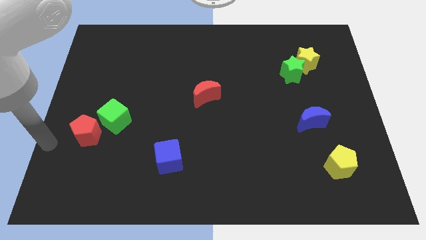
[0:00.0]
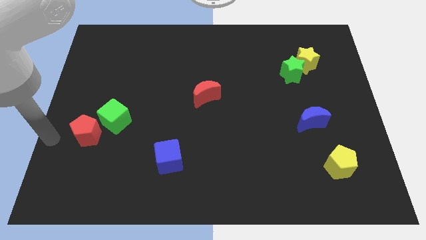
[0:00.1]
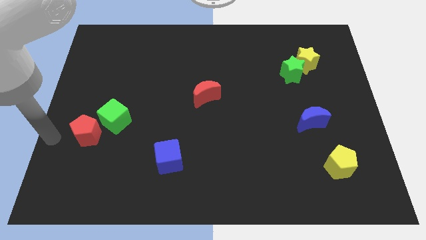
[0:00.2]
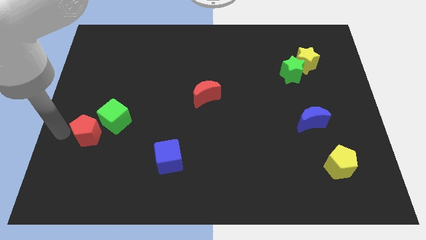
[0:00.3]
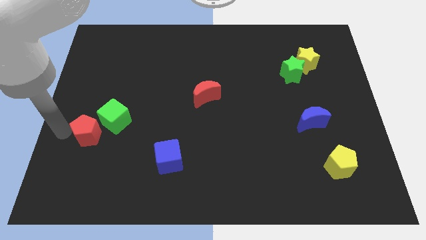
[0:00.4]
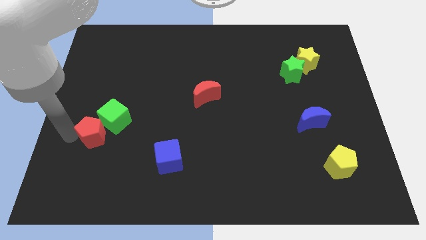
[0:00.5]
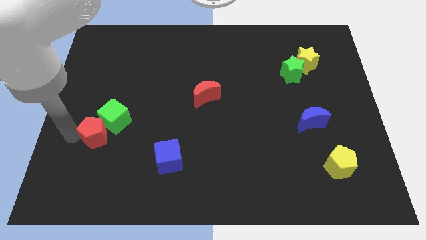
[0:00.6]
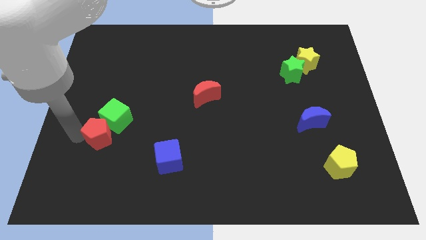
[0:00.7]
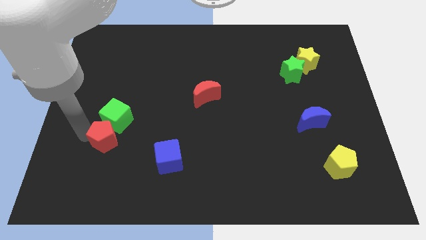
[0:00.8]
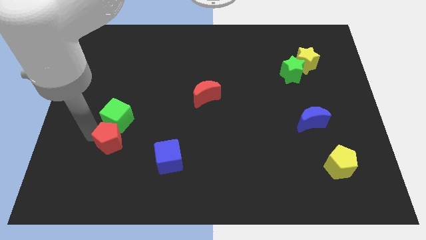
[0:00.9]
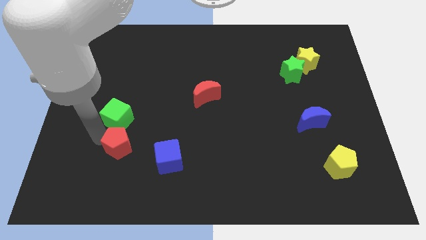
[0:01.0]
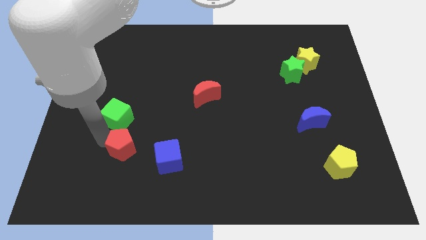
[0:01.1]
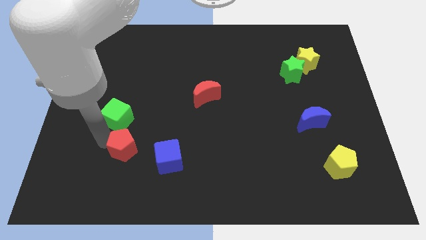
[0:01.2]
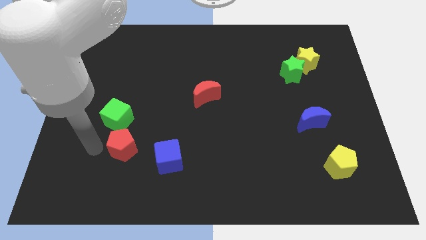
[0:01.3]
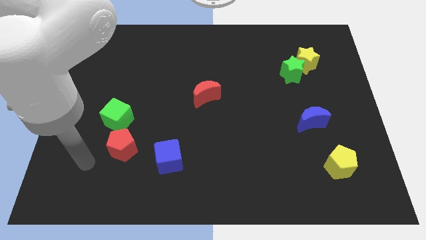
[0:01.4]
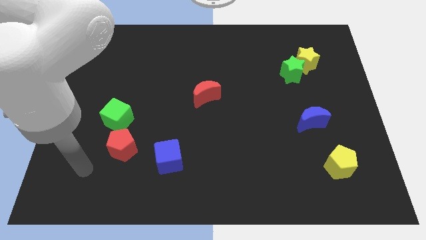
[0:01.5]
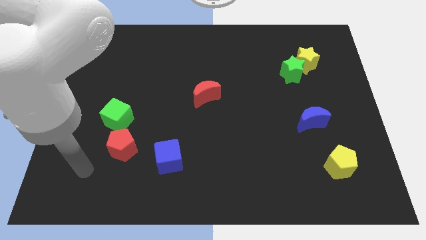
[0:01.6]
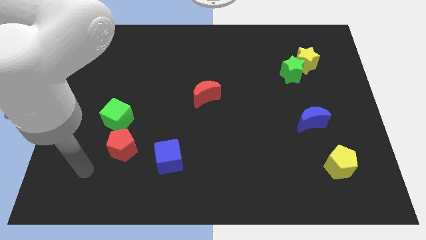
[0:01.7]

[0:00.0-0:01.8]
push the red pentagon to the bottom side of the green cube

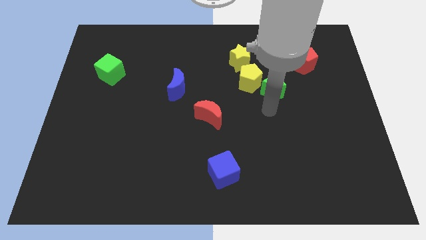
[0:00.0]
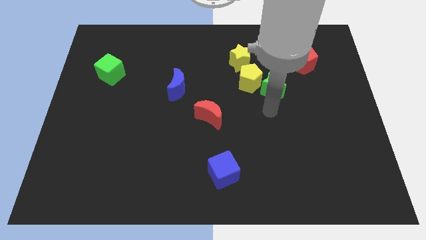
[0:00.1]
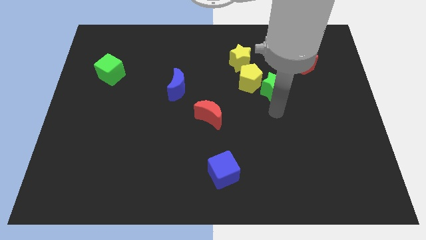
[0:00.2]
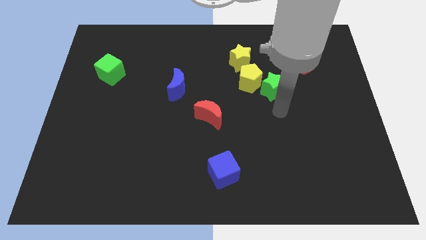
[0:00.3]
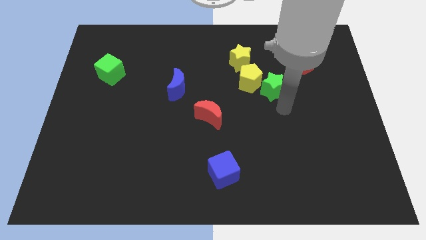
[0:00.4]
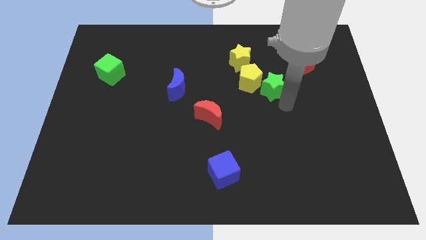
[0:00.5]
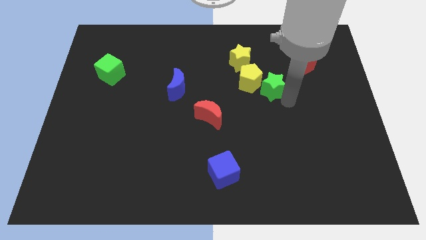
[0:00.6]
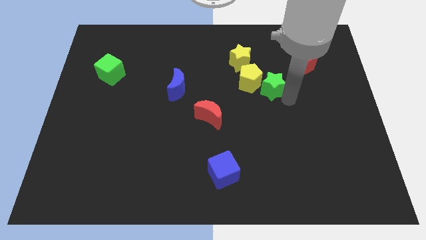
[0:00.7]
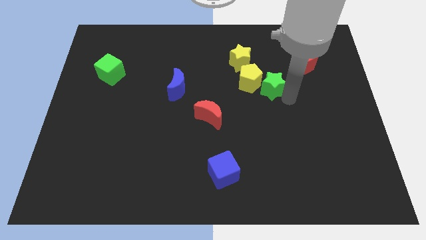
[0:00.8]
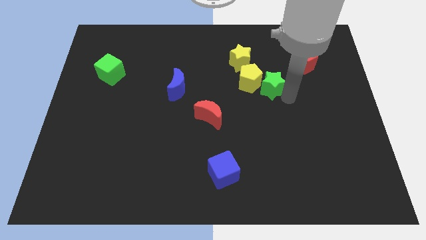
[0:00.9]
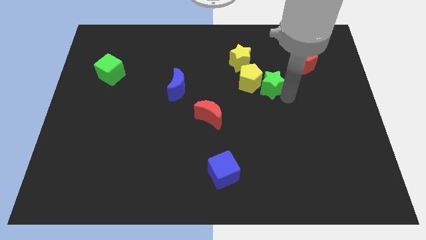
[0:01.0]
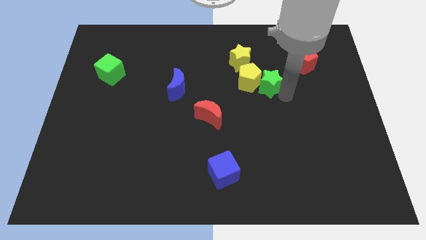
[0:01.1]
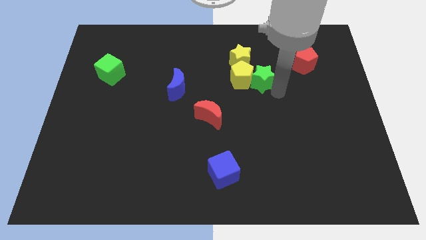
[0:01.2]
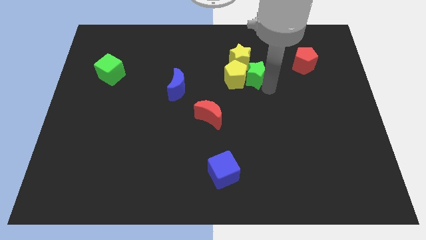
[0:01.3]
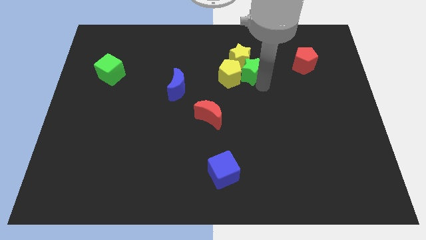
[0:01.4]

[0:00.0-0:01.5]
push the green star into the yellow pentagon

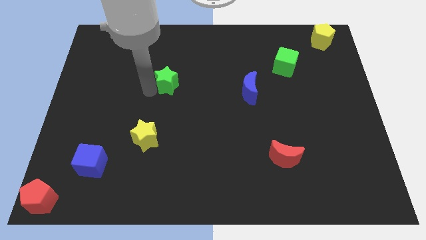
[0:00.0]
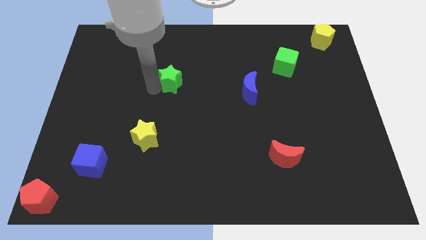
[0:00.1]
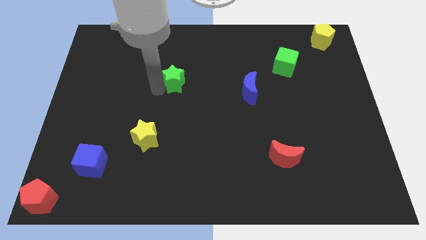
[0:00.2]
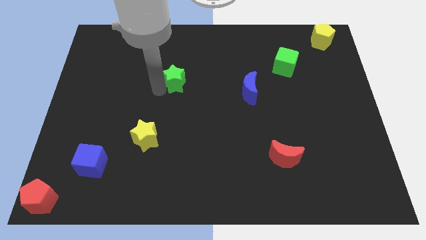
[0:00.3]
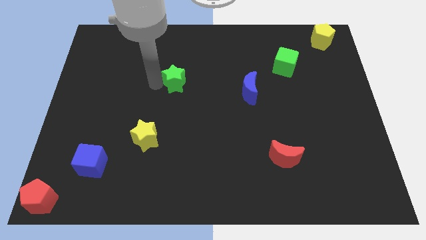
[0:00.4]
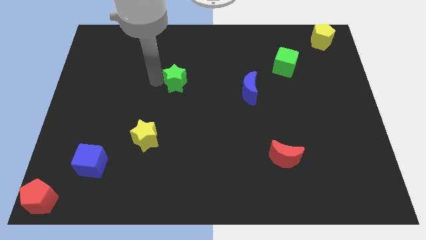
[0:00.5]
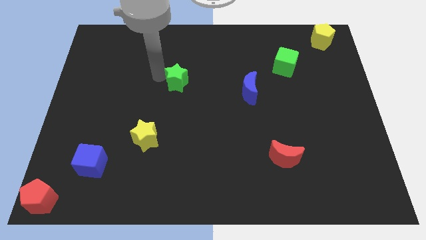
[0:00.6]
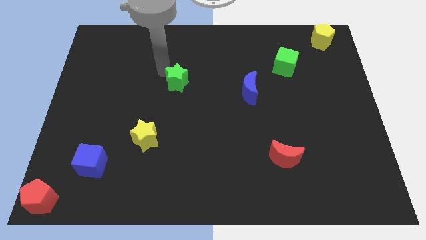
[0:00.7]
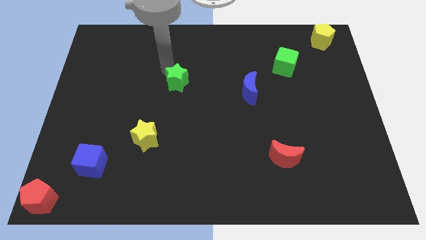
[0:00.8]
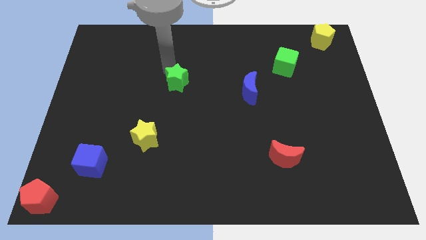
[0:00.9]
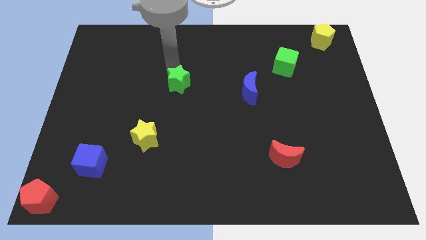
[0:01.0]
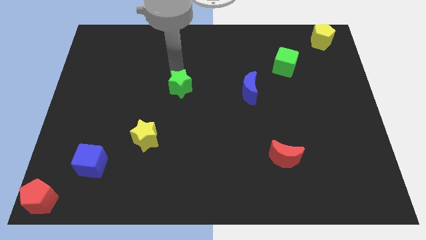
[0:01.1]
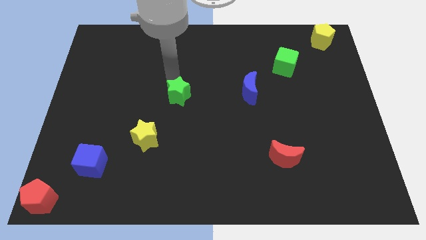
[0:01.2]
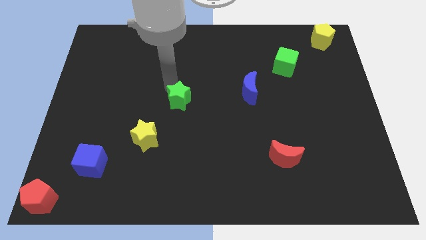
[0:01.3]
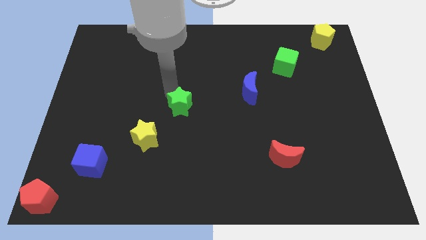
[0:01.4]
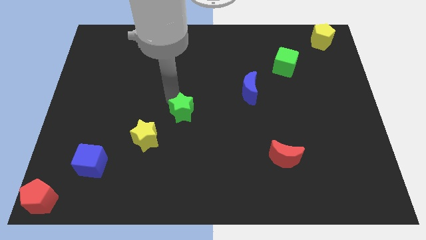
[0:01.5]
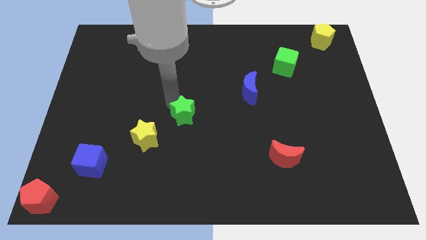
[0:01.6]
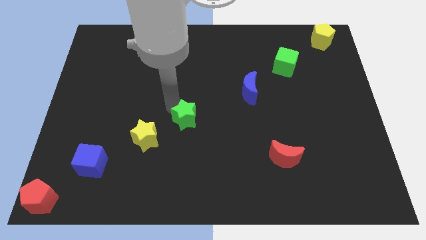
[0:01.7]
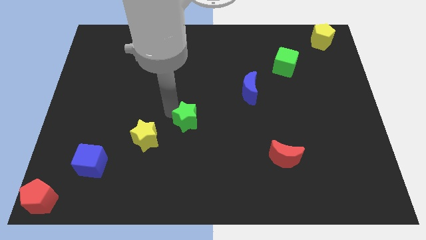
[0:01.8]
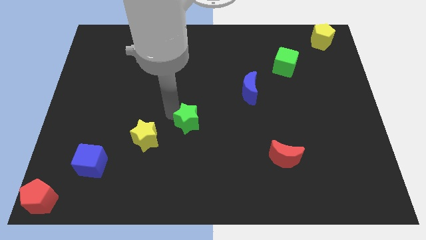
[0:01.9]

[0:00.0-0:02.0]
put the green star in the diagonal line of blocks

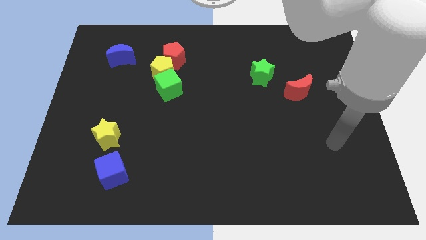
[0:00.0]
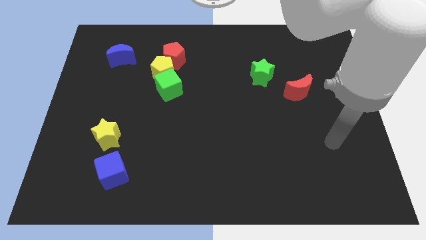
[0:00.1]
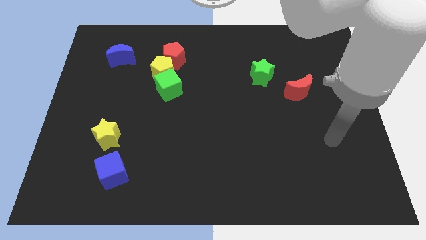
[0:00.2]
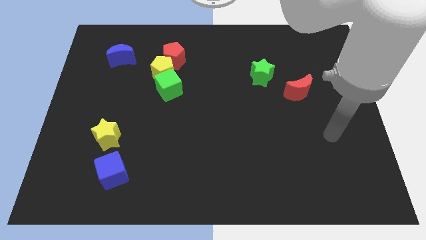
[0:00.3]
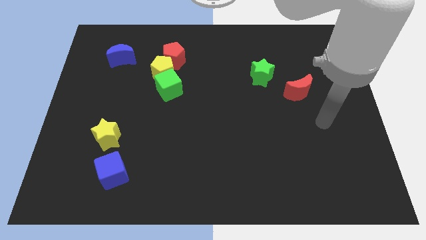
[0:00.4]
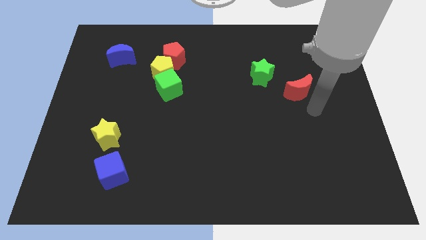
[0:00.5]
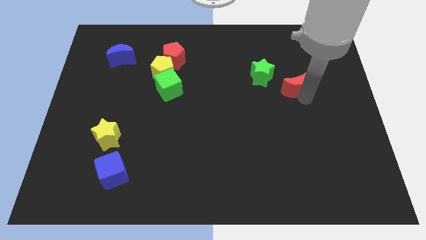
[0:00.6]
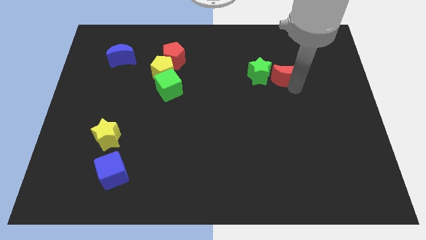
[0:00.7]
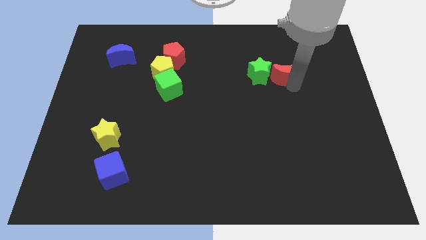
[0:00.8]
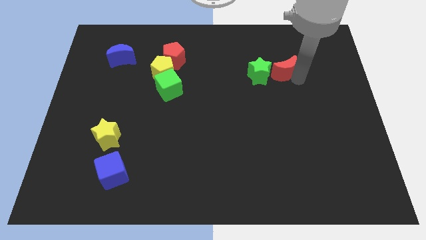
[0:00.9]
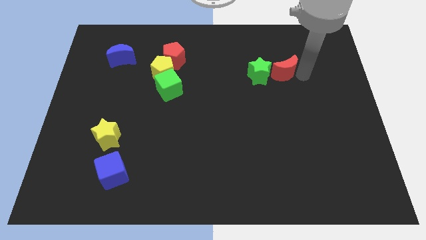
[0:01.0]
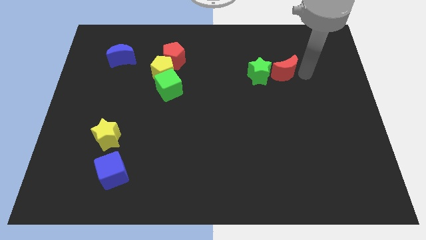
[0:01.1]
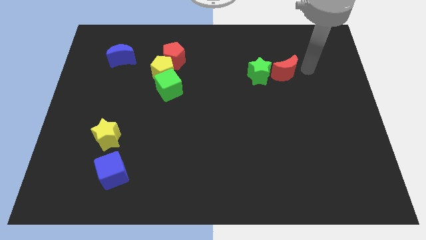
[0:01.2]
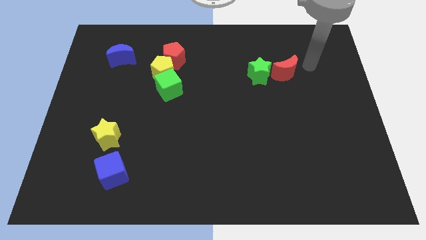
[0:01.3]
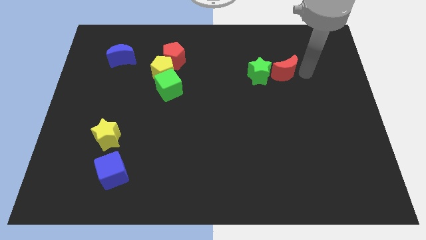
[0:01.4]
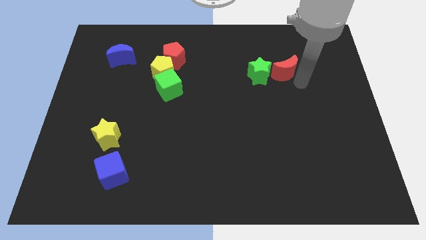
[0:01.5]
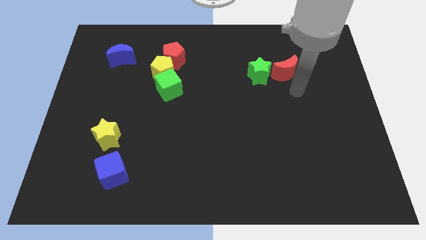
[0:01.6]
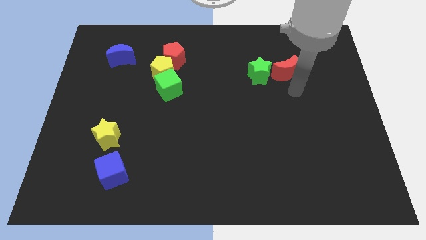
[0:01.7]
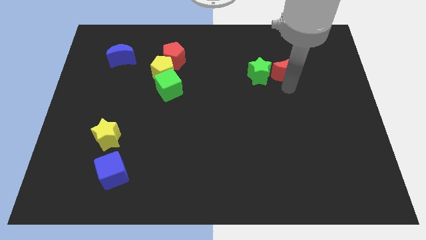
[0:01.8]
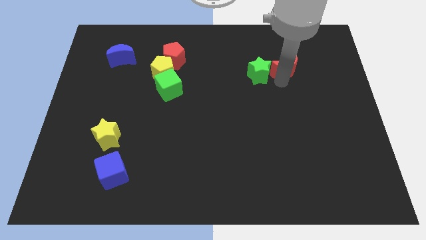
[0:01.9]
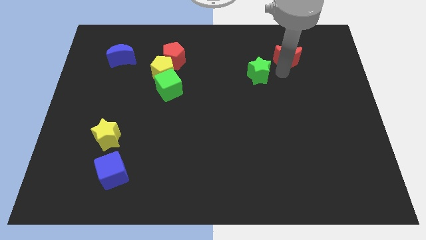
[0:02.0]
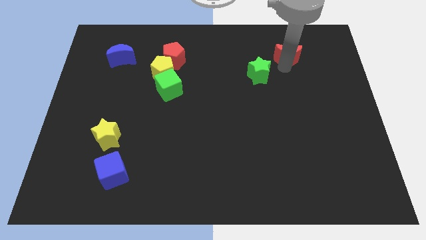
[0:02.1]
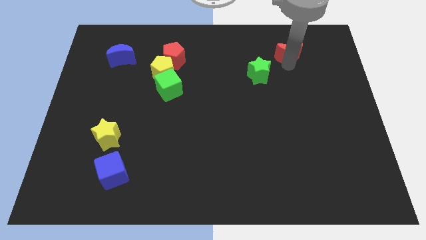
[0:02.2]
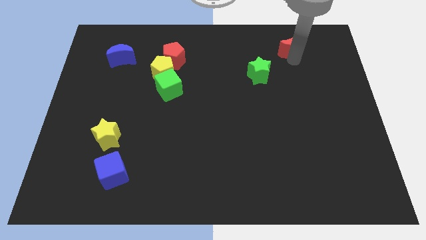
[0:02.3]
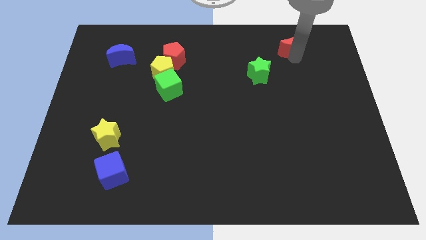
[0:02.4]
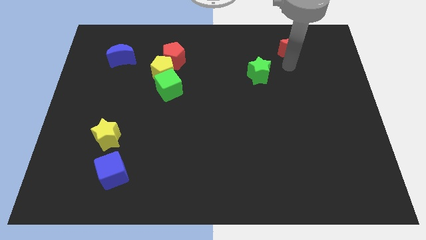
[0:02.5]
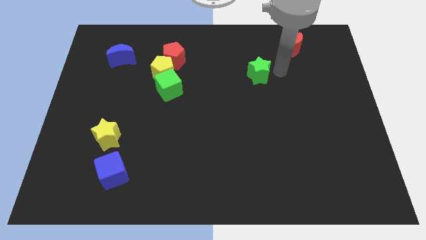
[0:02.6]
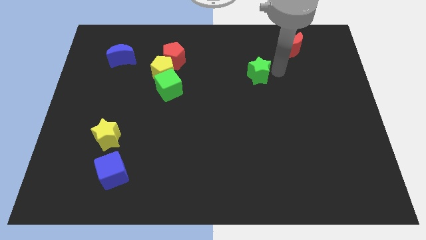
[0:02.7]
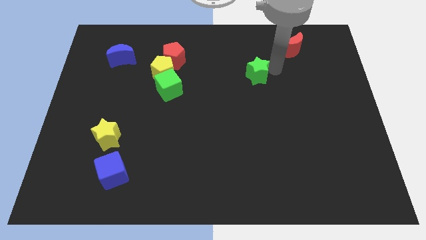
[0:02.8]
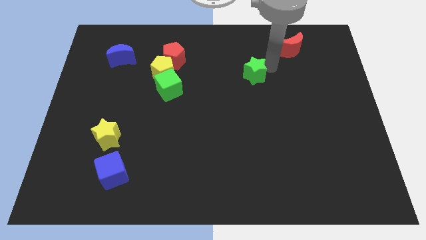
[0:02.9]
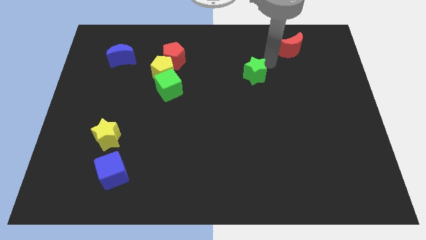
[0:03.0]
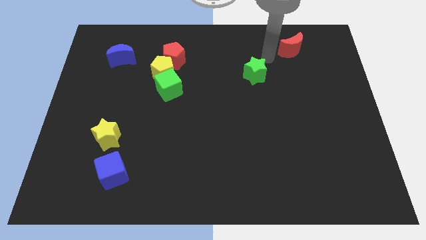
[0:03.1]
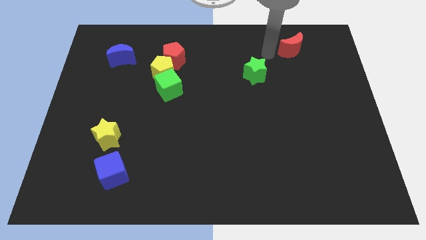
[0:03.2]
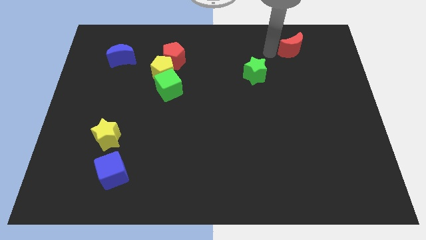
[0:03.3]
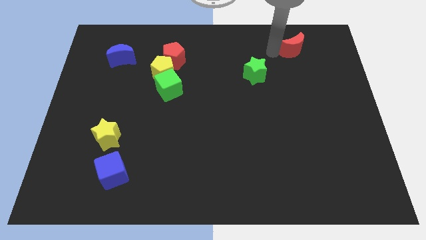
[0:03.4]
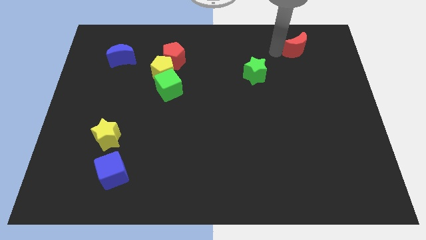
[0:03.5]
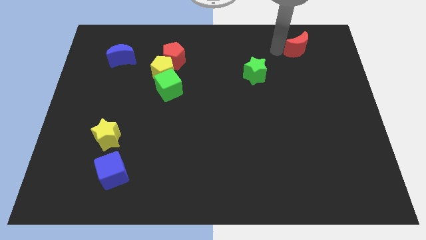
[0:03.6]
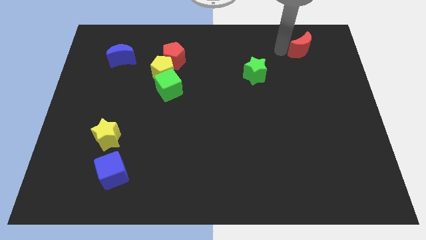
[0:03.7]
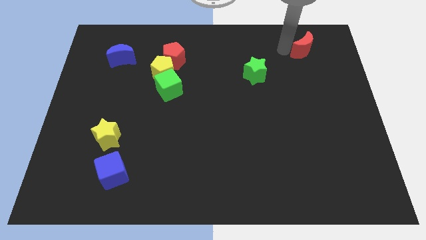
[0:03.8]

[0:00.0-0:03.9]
separate red moon from green star
